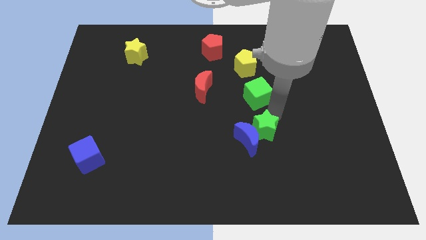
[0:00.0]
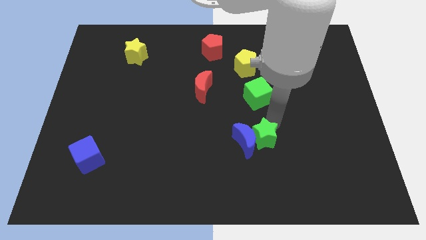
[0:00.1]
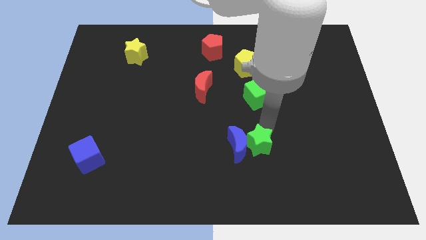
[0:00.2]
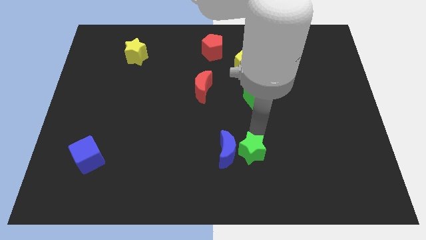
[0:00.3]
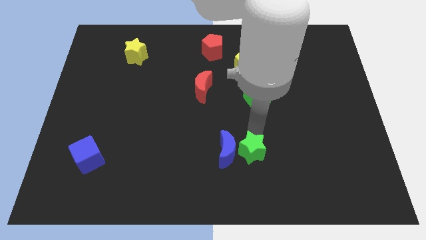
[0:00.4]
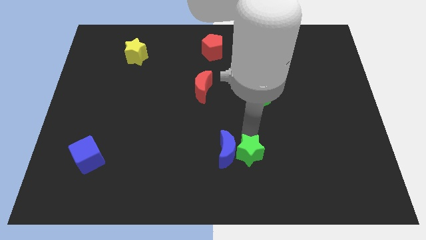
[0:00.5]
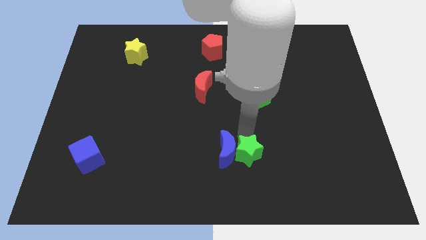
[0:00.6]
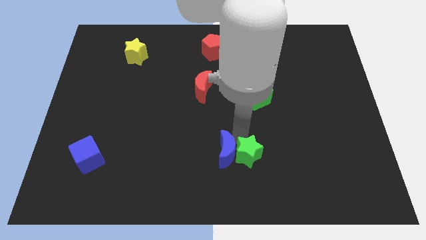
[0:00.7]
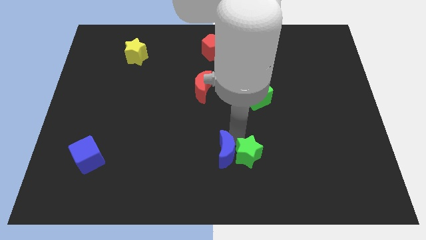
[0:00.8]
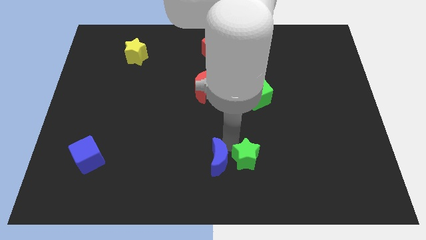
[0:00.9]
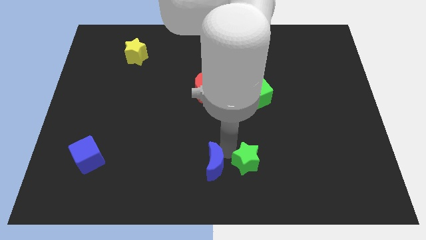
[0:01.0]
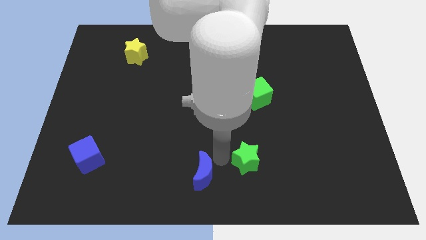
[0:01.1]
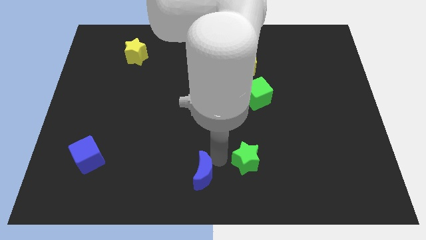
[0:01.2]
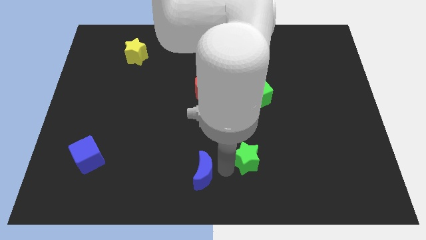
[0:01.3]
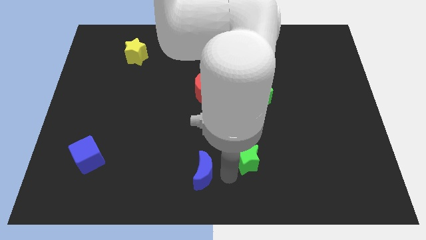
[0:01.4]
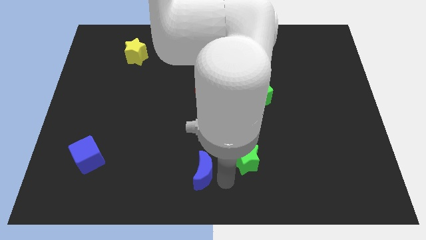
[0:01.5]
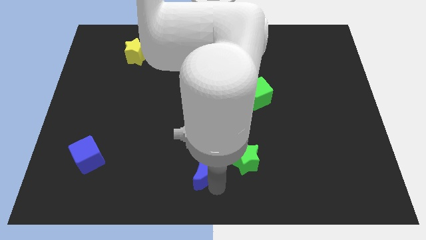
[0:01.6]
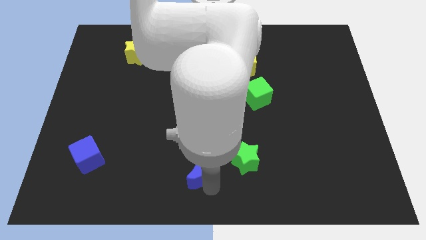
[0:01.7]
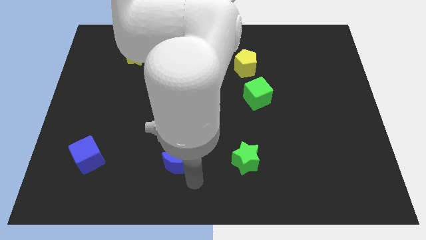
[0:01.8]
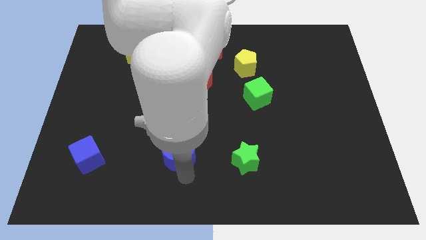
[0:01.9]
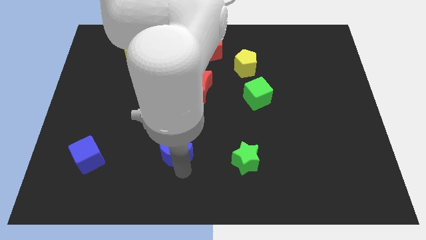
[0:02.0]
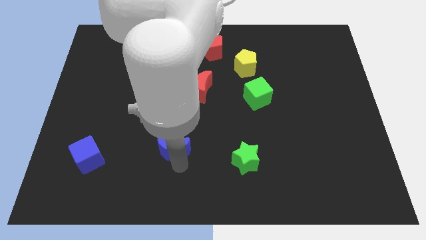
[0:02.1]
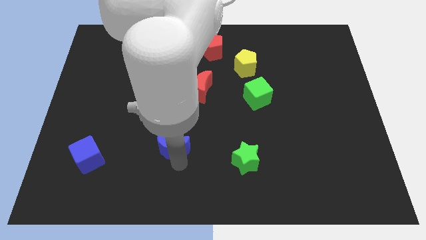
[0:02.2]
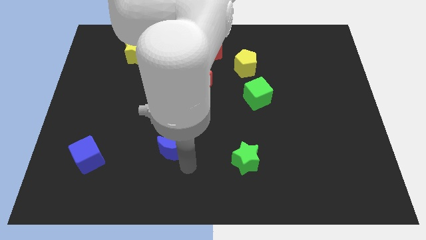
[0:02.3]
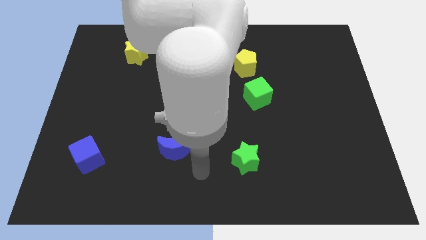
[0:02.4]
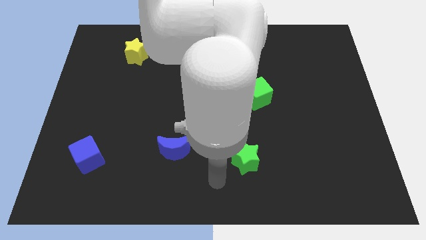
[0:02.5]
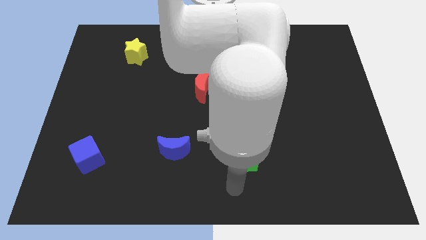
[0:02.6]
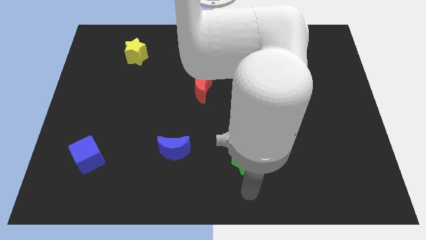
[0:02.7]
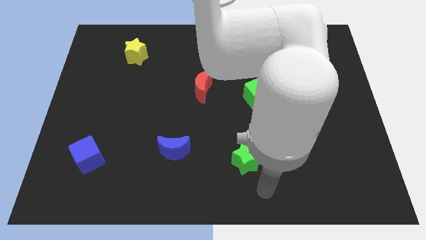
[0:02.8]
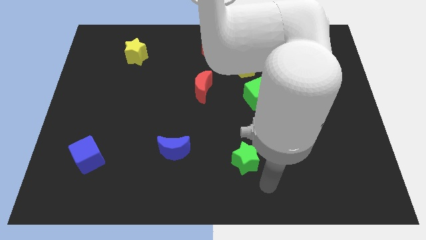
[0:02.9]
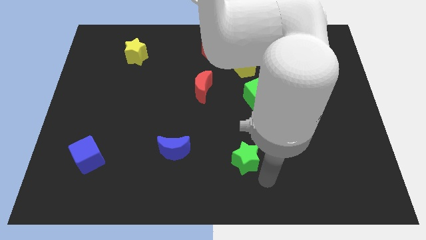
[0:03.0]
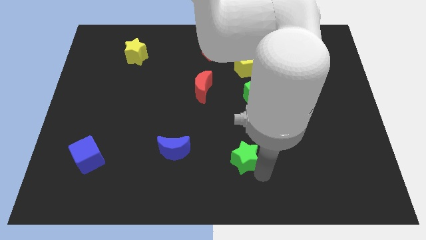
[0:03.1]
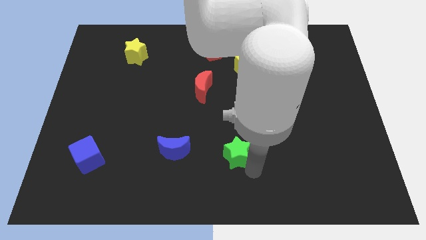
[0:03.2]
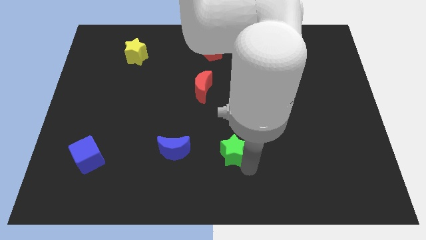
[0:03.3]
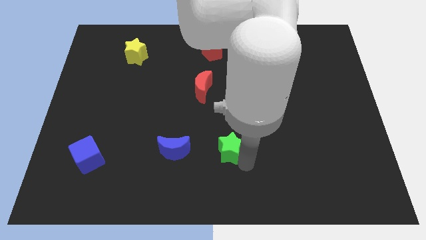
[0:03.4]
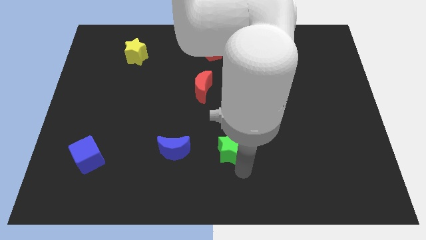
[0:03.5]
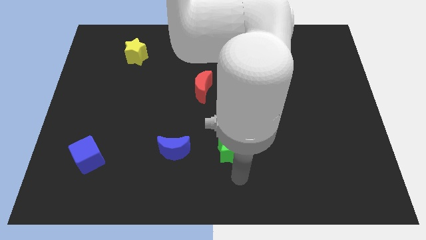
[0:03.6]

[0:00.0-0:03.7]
drag the green star to the right of the blue moon

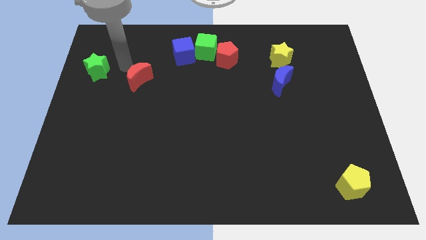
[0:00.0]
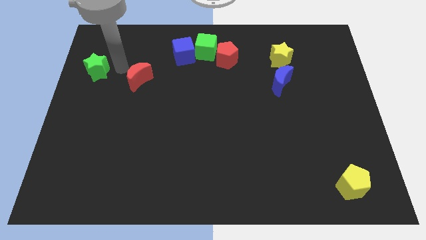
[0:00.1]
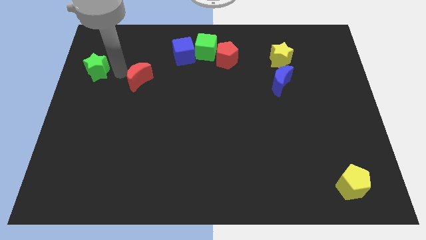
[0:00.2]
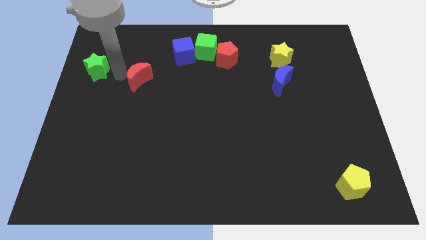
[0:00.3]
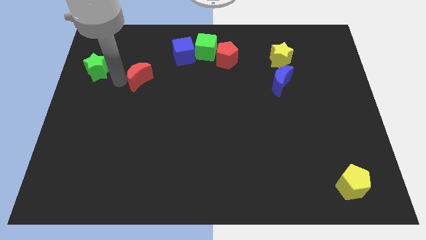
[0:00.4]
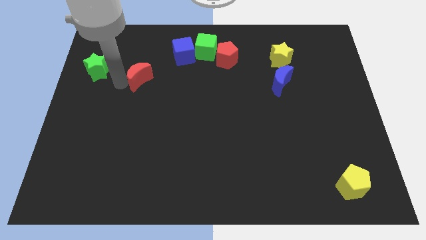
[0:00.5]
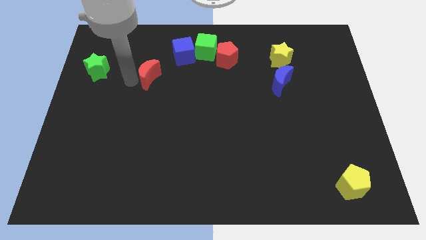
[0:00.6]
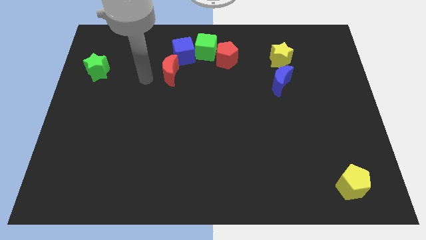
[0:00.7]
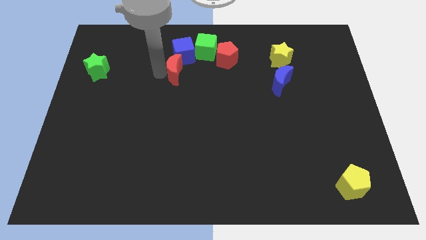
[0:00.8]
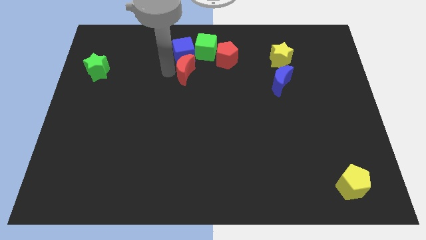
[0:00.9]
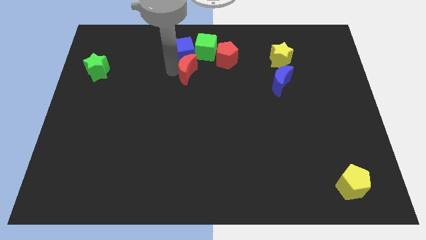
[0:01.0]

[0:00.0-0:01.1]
push the red crescent to the bottom of the blue cube

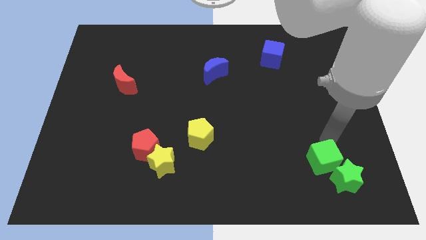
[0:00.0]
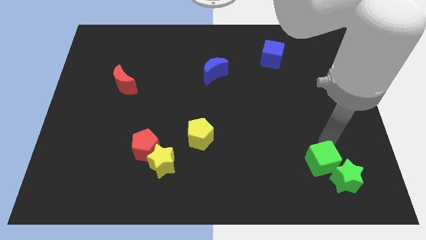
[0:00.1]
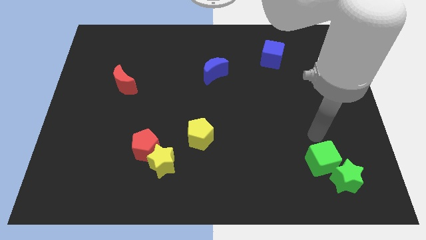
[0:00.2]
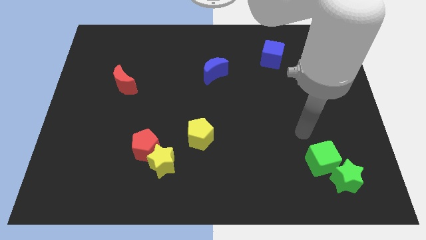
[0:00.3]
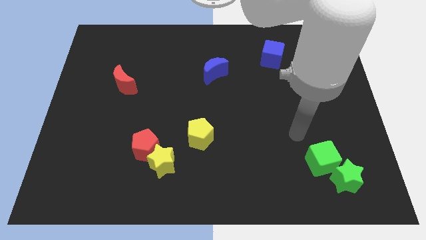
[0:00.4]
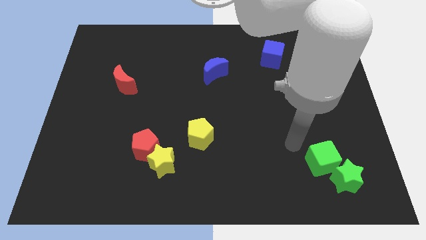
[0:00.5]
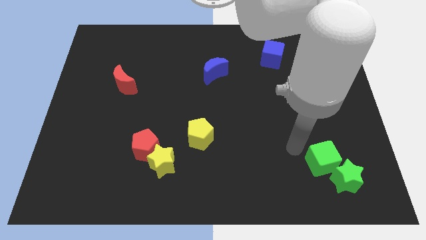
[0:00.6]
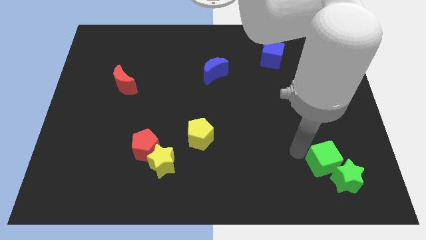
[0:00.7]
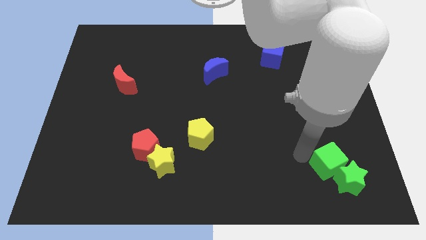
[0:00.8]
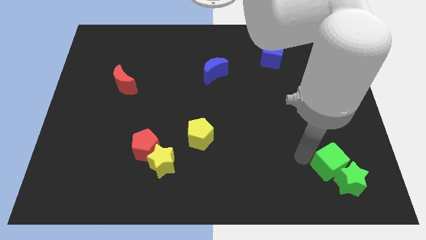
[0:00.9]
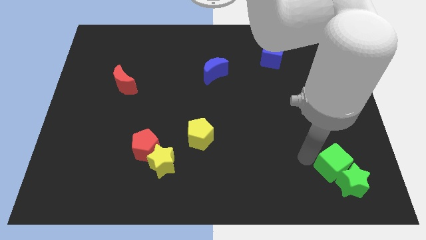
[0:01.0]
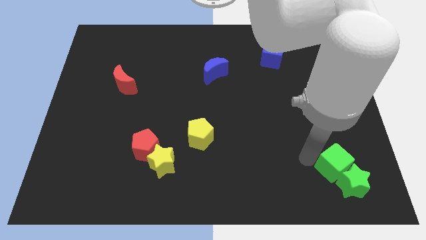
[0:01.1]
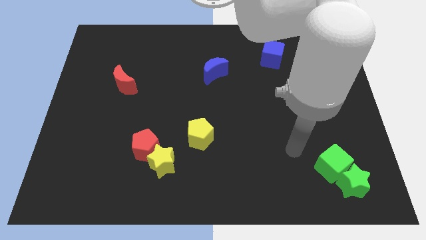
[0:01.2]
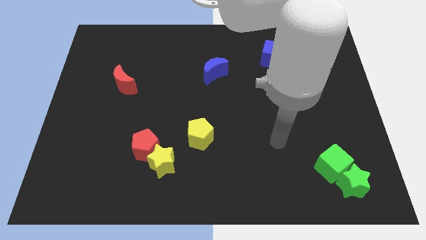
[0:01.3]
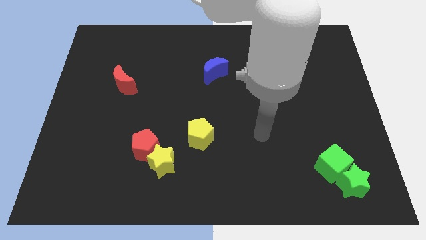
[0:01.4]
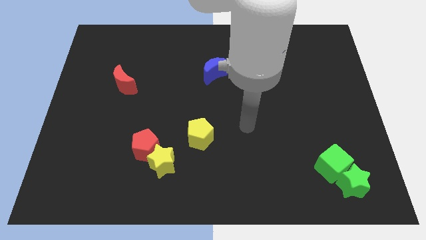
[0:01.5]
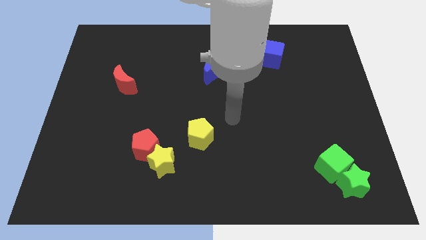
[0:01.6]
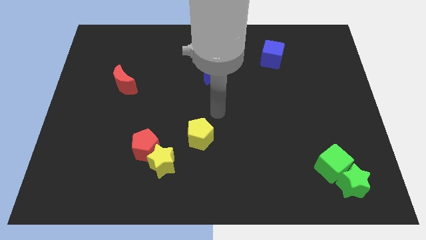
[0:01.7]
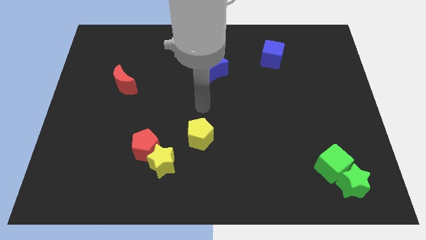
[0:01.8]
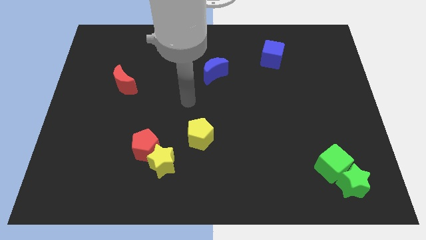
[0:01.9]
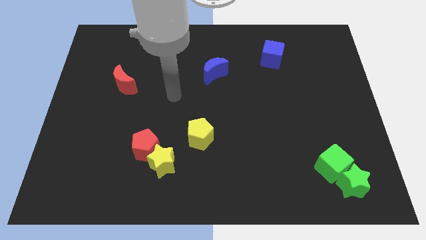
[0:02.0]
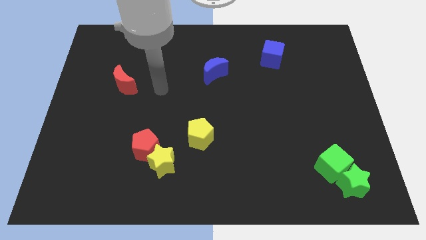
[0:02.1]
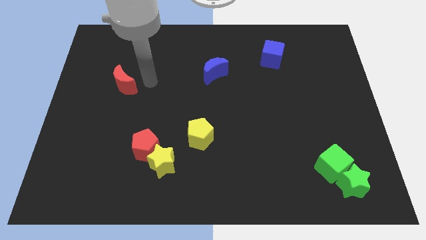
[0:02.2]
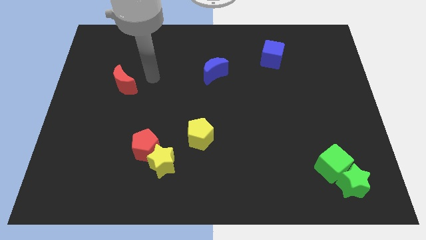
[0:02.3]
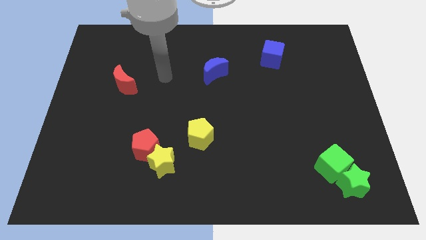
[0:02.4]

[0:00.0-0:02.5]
slightly move the group of green blocks downwards and go away

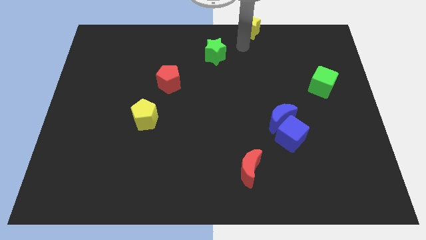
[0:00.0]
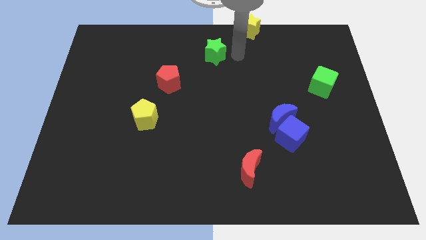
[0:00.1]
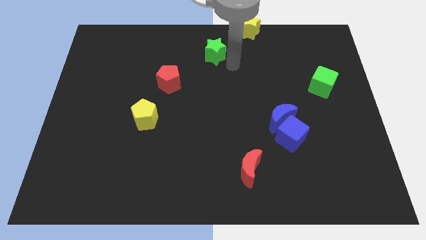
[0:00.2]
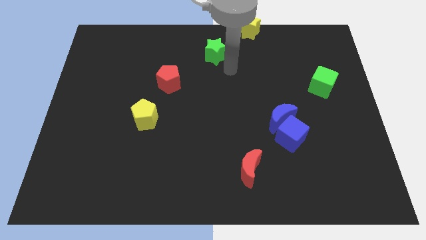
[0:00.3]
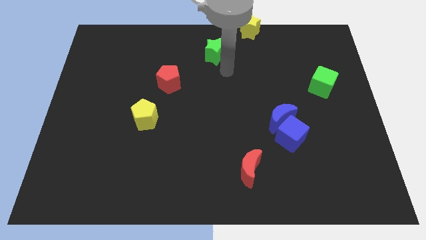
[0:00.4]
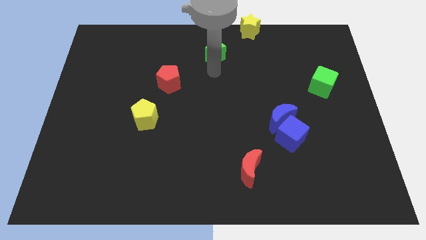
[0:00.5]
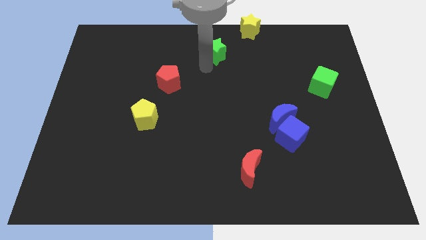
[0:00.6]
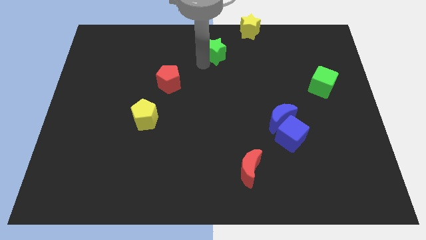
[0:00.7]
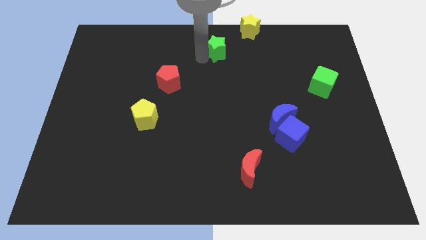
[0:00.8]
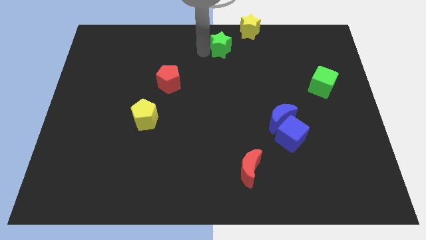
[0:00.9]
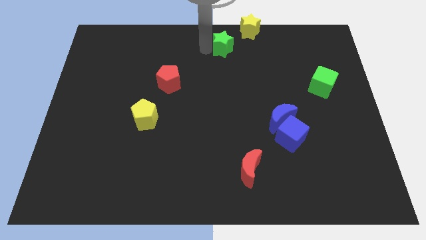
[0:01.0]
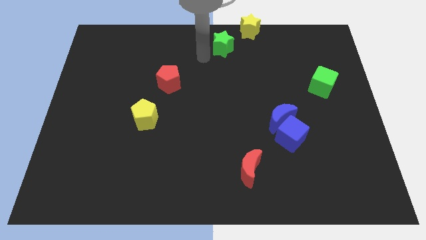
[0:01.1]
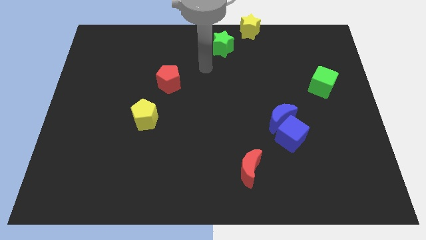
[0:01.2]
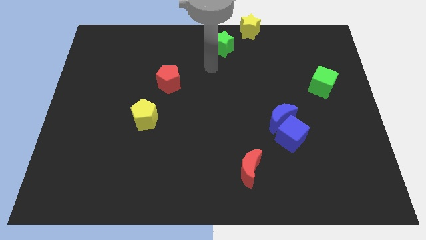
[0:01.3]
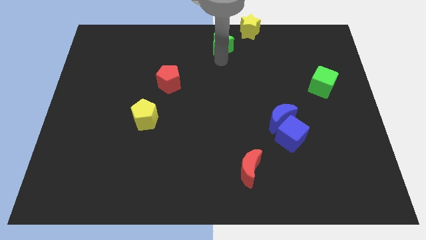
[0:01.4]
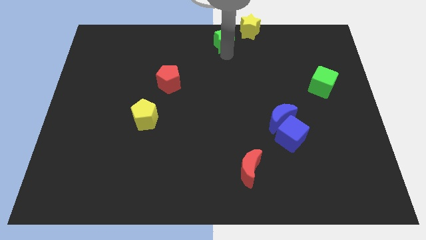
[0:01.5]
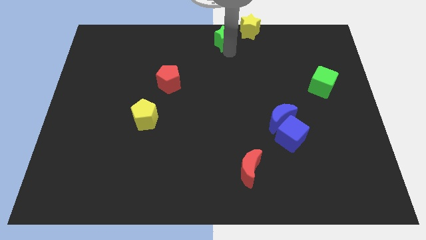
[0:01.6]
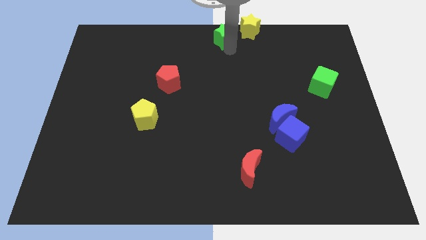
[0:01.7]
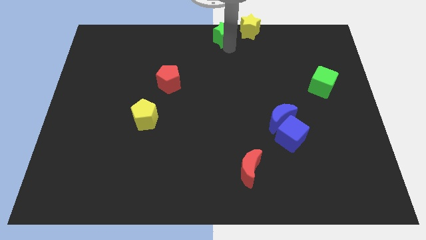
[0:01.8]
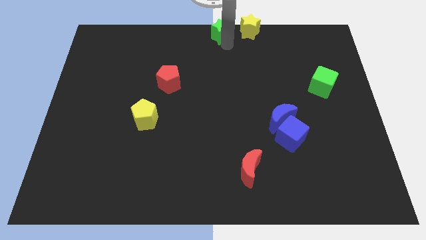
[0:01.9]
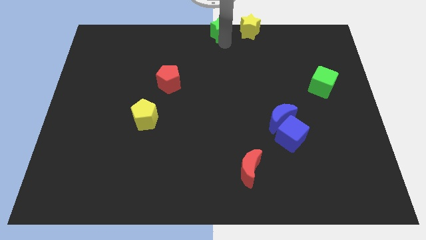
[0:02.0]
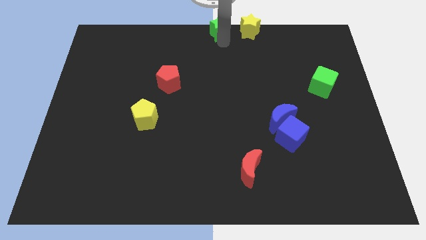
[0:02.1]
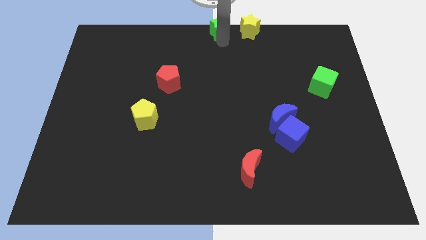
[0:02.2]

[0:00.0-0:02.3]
move the green star to the left of yellow star
